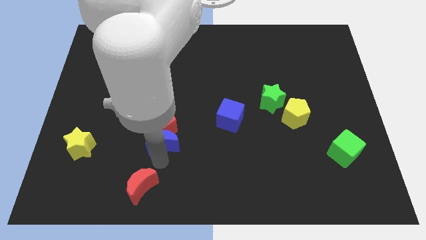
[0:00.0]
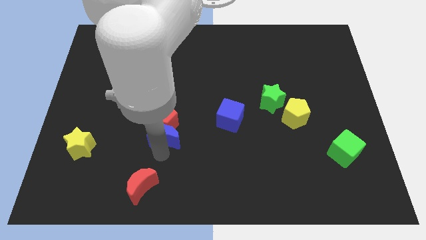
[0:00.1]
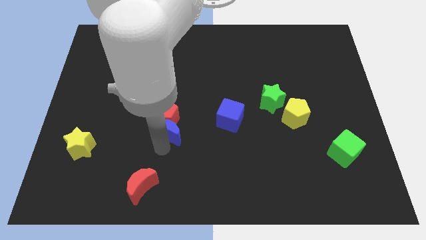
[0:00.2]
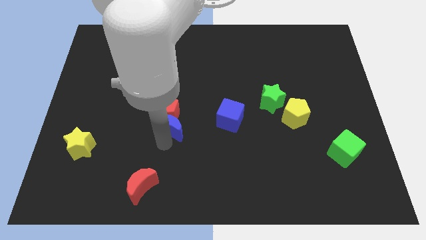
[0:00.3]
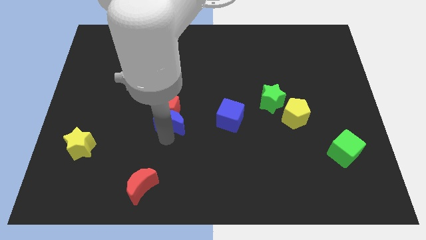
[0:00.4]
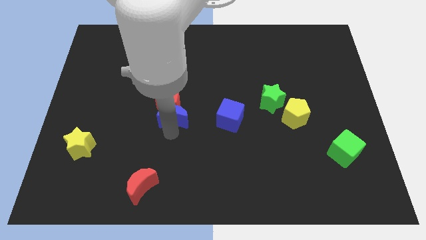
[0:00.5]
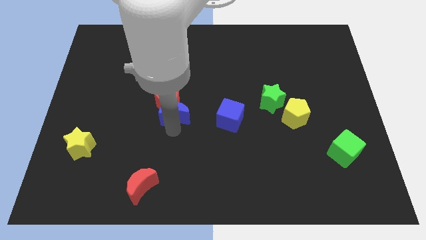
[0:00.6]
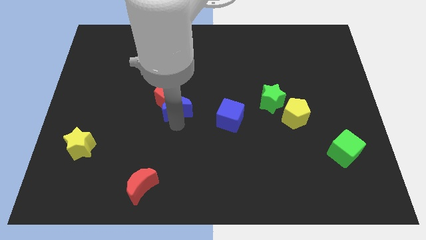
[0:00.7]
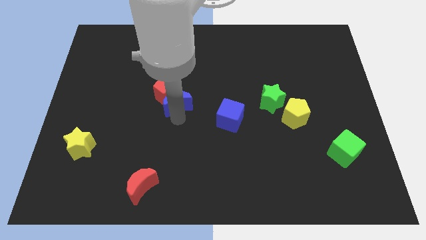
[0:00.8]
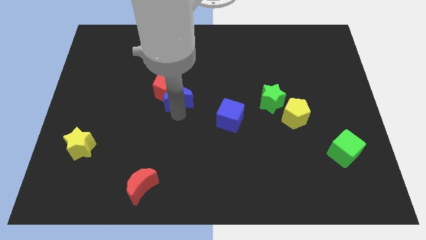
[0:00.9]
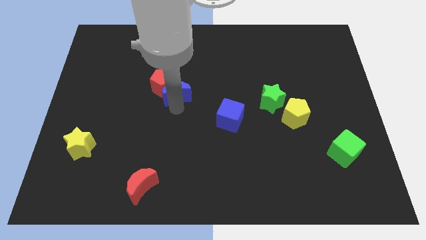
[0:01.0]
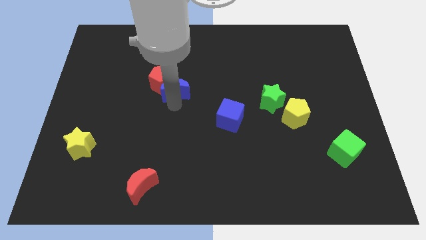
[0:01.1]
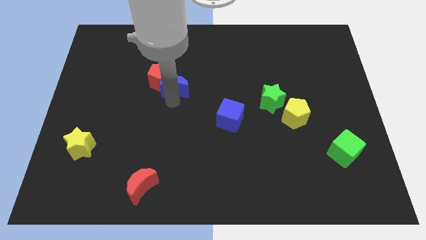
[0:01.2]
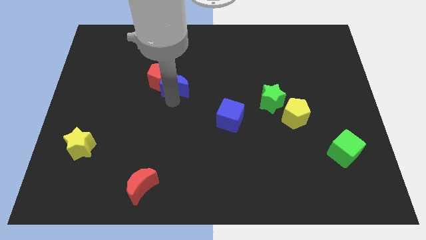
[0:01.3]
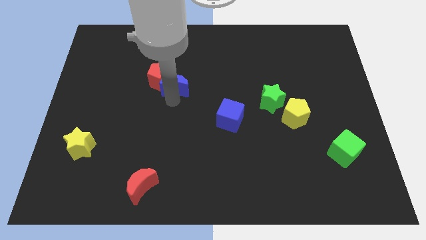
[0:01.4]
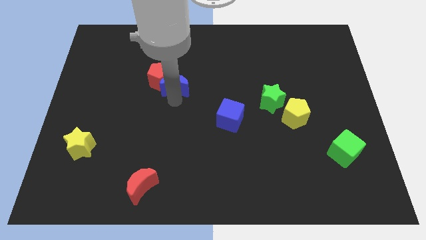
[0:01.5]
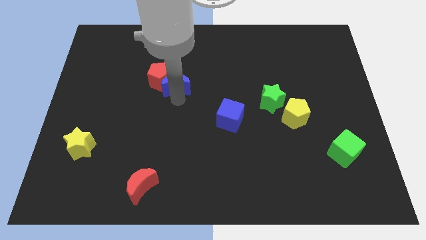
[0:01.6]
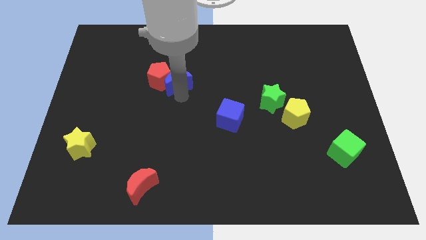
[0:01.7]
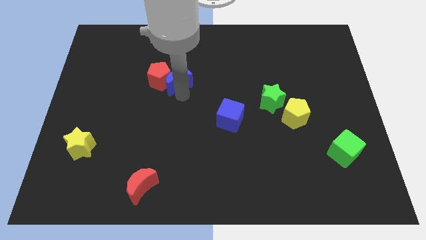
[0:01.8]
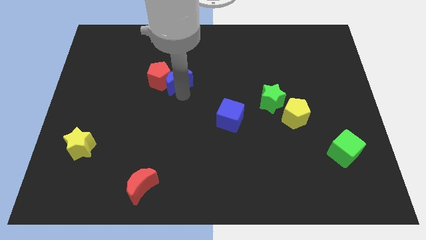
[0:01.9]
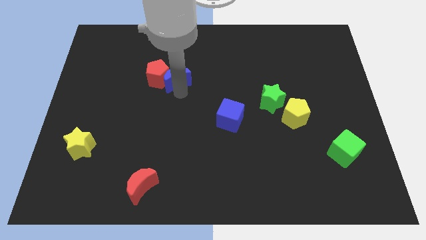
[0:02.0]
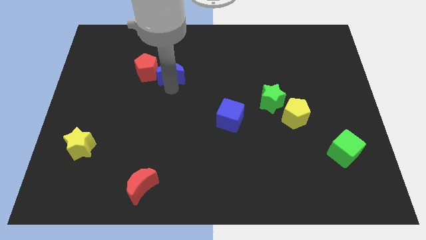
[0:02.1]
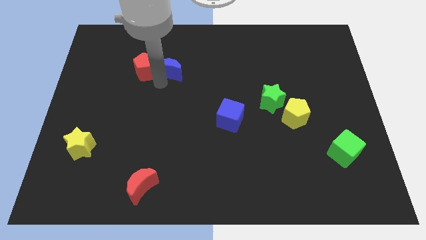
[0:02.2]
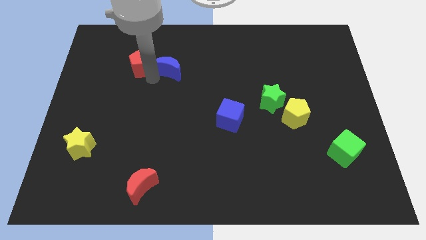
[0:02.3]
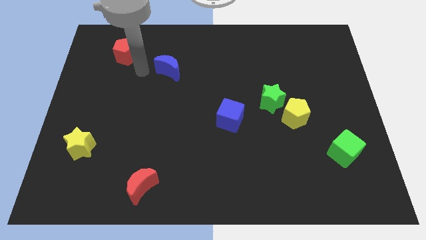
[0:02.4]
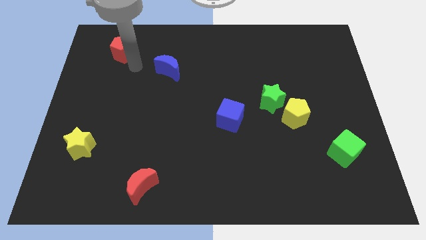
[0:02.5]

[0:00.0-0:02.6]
separate red pentagon from blue moon

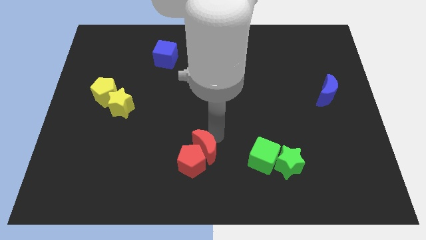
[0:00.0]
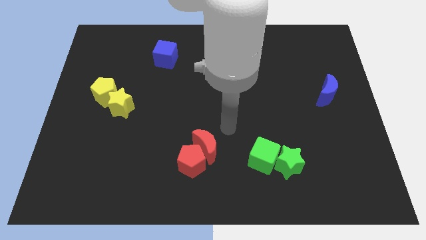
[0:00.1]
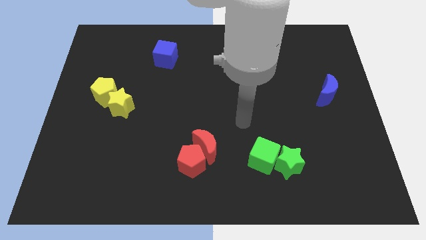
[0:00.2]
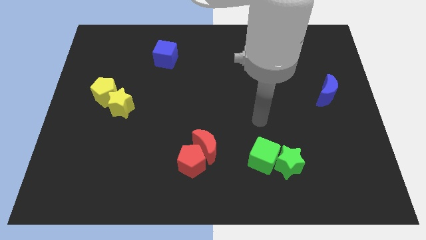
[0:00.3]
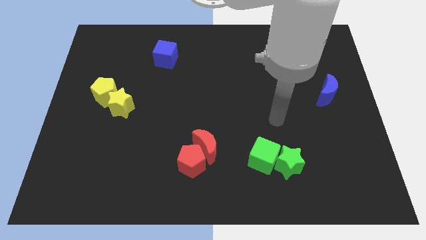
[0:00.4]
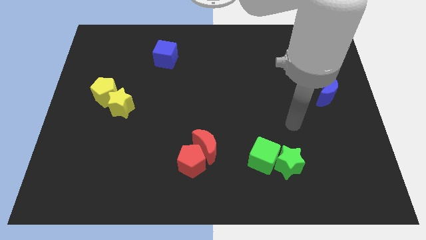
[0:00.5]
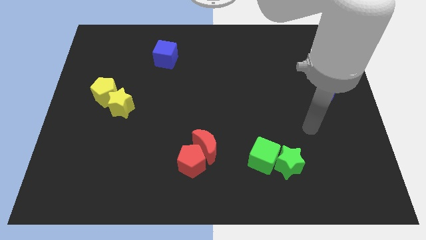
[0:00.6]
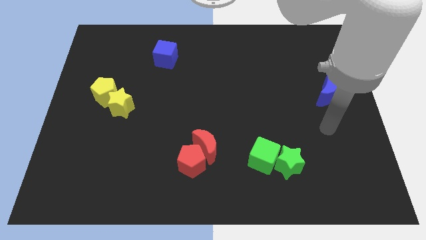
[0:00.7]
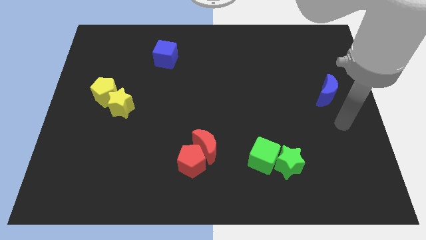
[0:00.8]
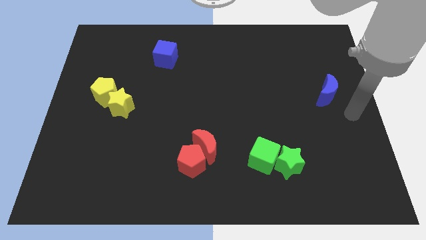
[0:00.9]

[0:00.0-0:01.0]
move your arm away from the red moon

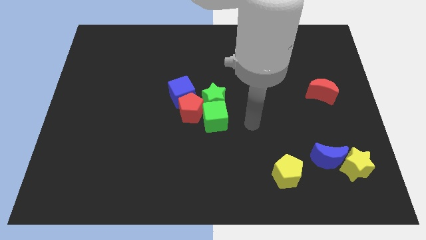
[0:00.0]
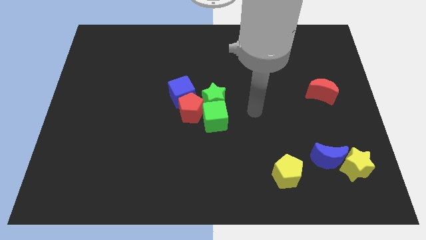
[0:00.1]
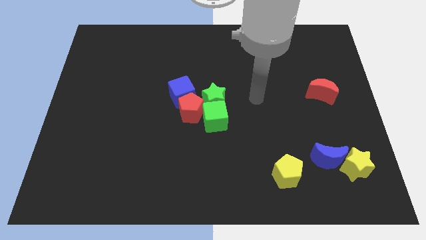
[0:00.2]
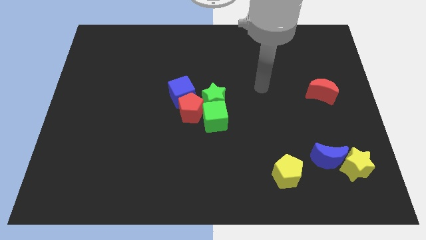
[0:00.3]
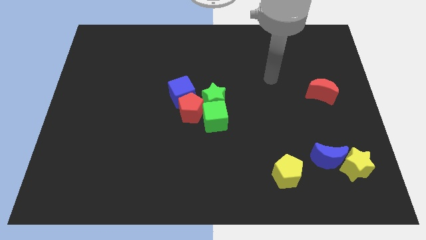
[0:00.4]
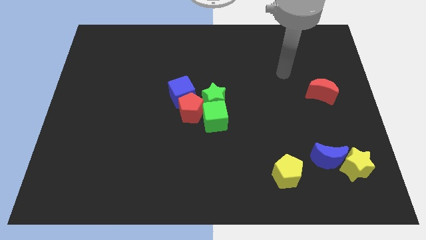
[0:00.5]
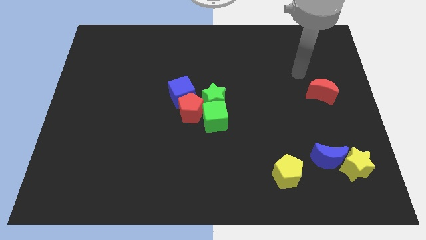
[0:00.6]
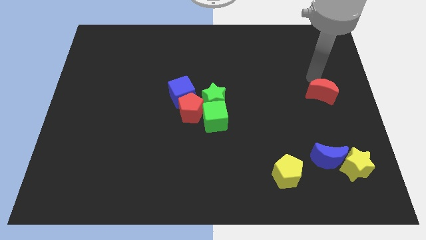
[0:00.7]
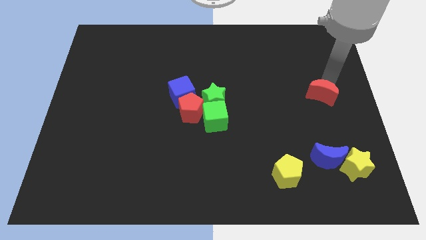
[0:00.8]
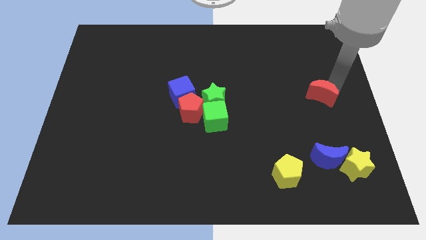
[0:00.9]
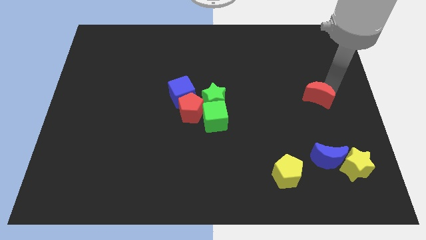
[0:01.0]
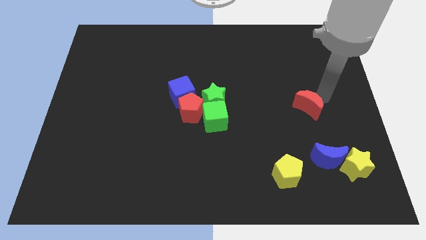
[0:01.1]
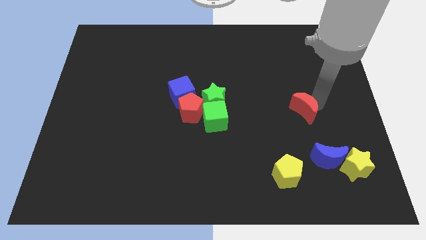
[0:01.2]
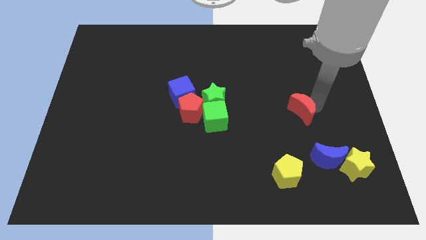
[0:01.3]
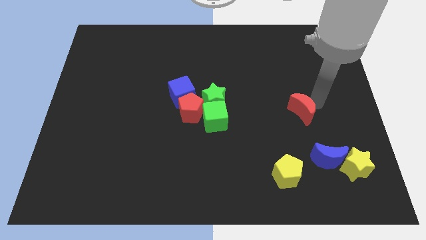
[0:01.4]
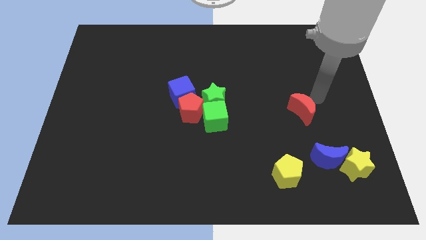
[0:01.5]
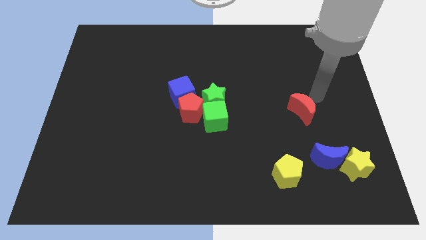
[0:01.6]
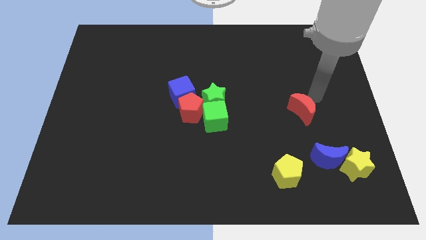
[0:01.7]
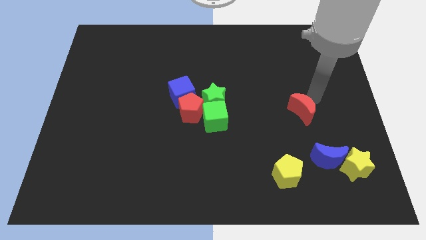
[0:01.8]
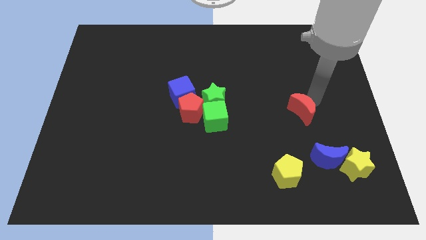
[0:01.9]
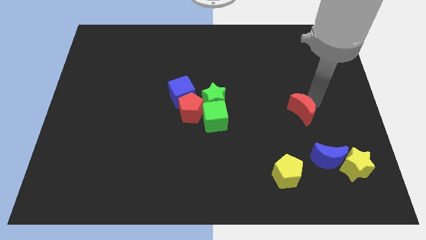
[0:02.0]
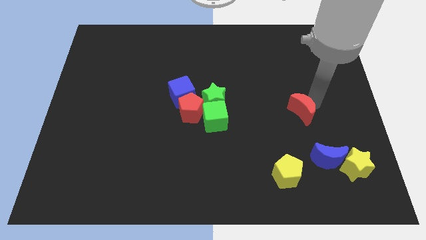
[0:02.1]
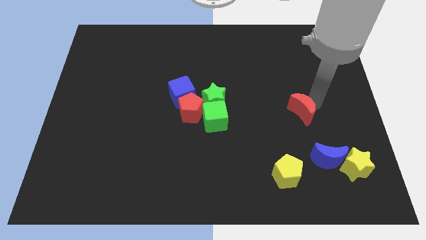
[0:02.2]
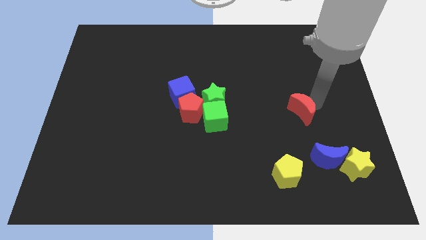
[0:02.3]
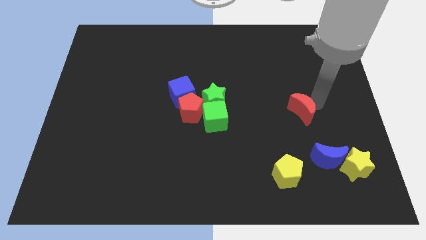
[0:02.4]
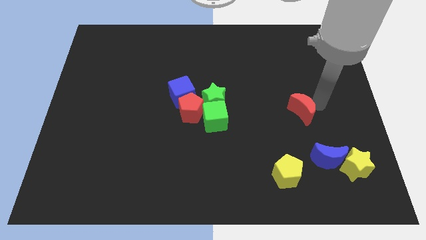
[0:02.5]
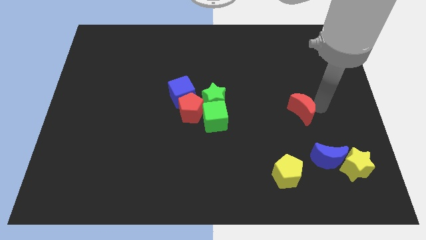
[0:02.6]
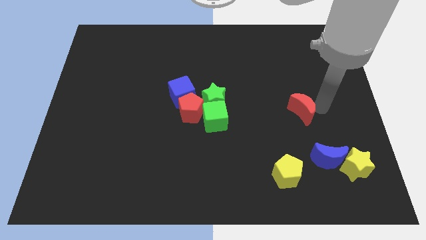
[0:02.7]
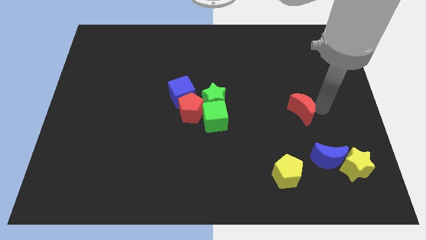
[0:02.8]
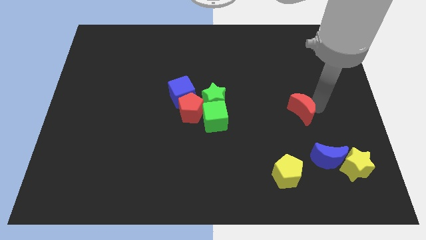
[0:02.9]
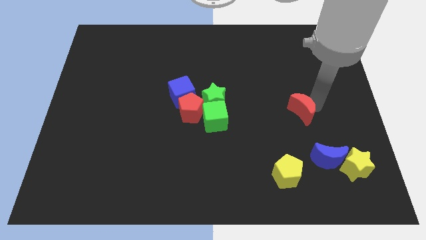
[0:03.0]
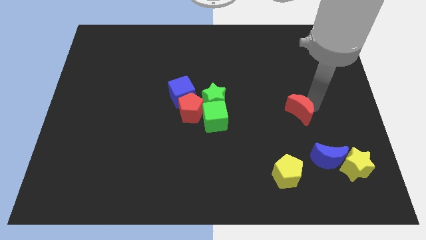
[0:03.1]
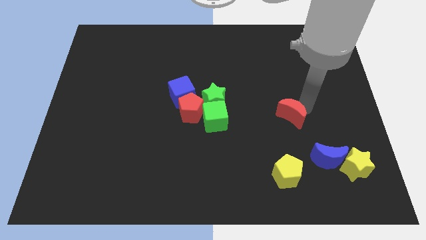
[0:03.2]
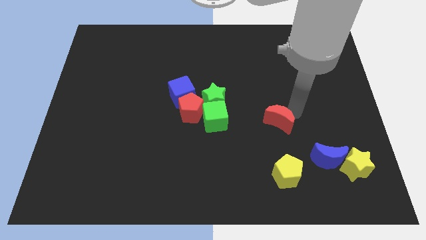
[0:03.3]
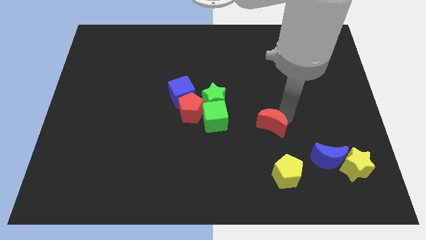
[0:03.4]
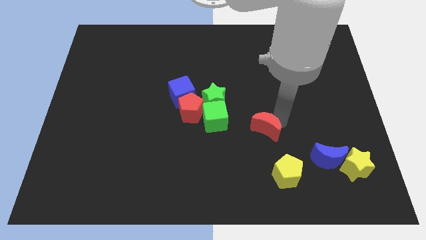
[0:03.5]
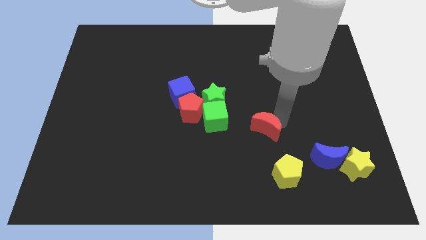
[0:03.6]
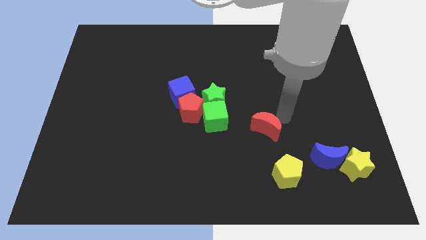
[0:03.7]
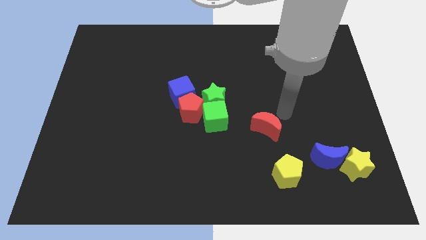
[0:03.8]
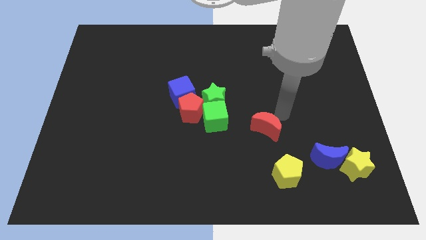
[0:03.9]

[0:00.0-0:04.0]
push the red crescent towards the bottom center

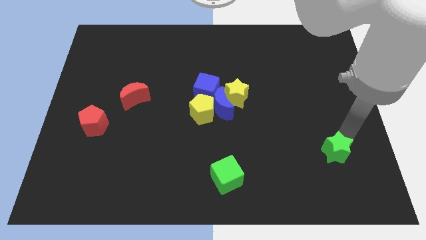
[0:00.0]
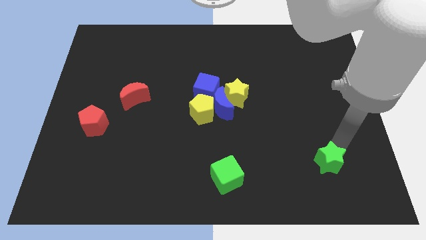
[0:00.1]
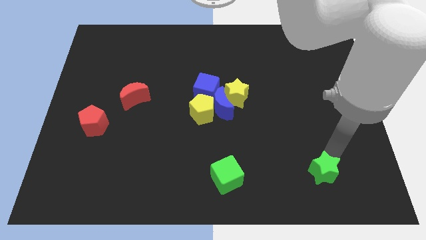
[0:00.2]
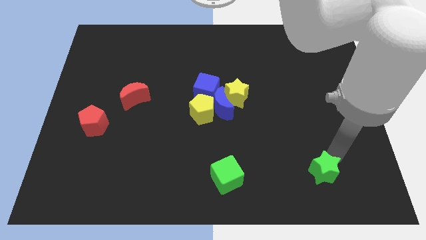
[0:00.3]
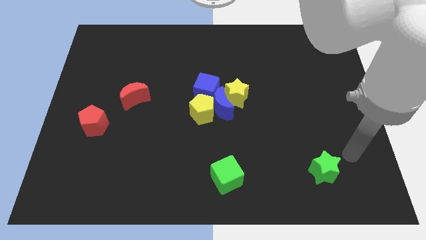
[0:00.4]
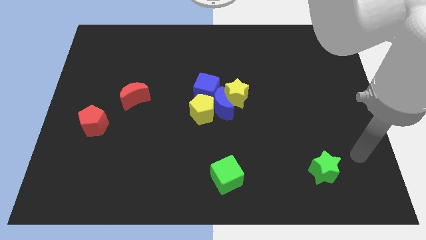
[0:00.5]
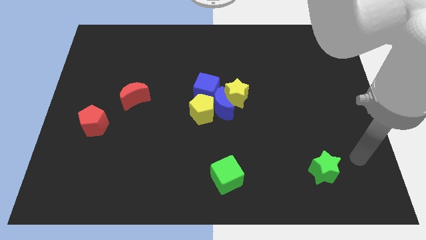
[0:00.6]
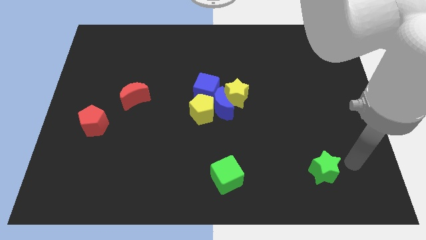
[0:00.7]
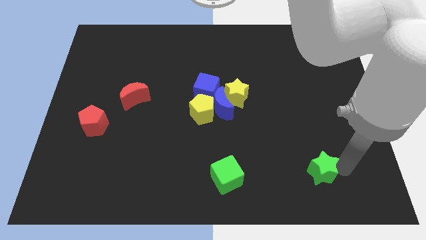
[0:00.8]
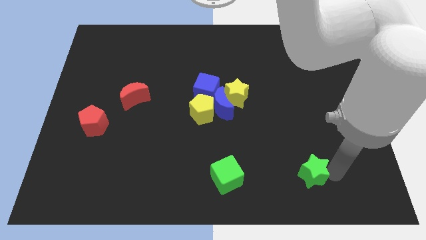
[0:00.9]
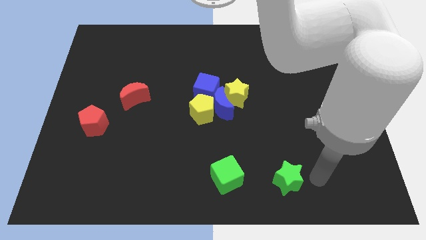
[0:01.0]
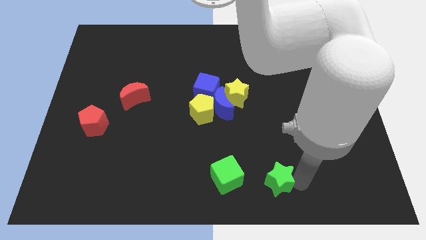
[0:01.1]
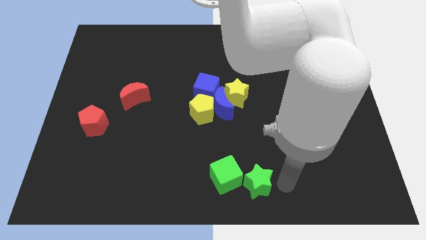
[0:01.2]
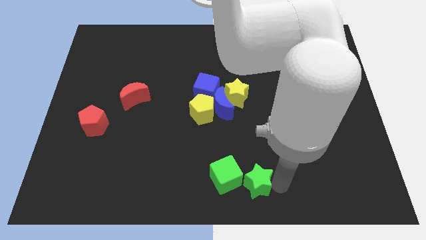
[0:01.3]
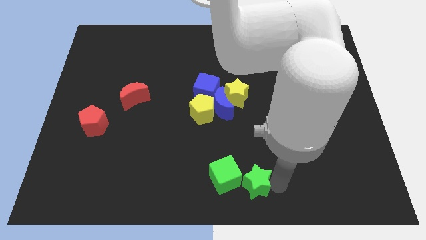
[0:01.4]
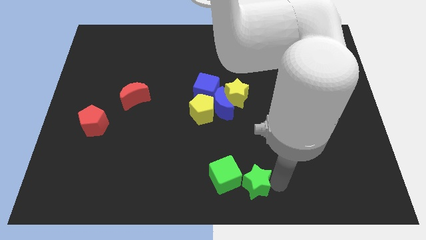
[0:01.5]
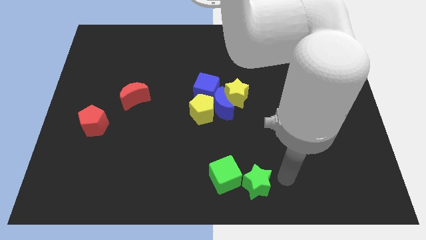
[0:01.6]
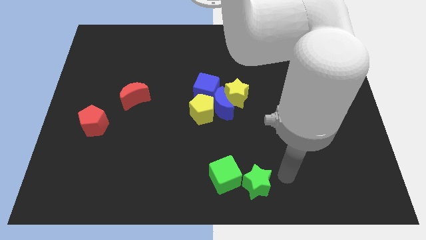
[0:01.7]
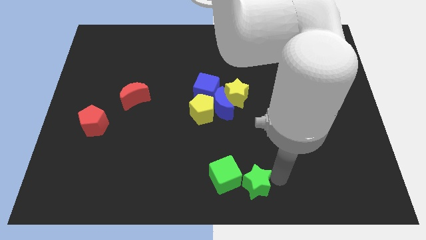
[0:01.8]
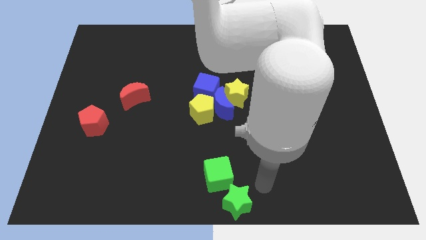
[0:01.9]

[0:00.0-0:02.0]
place the green star to the bottom right of the green cube
